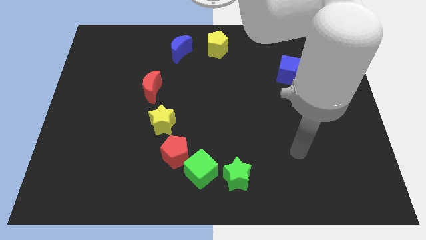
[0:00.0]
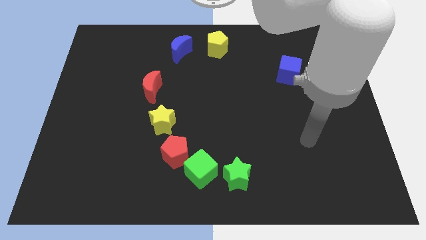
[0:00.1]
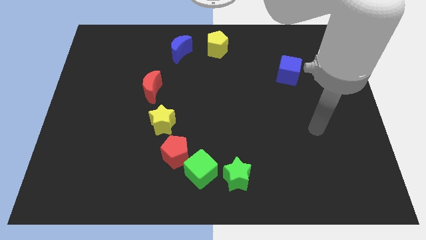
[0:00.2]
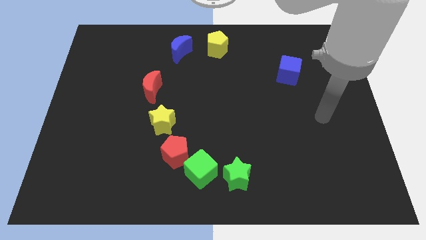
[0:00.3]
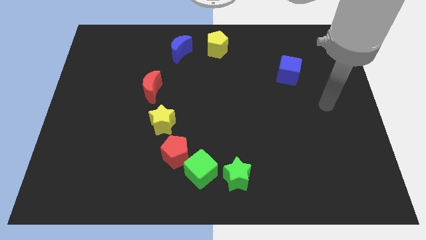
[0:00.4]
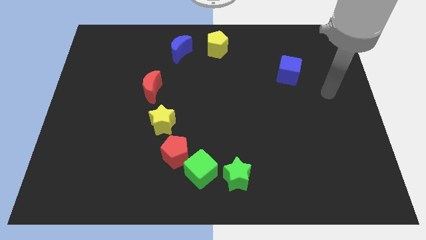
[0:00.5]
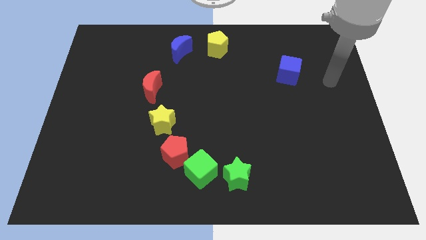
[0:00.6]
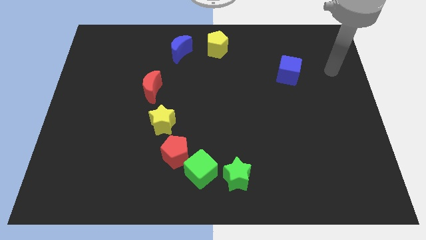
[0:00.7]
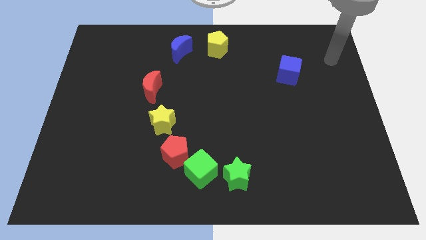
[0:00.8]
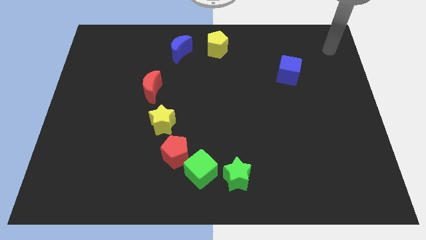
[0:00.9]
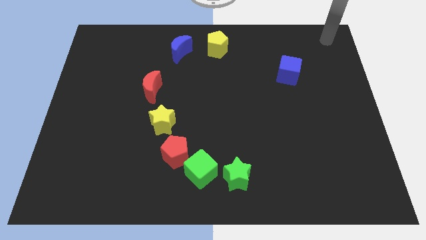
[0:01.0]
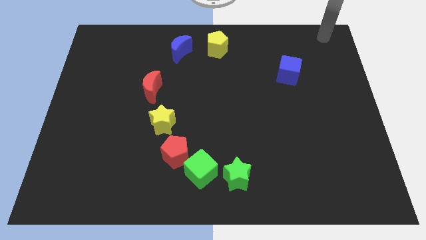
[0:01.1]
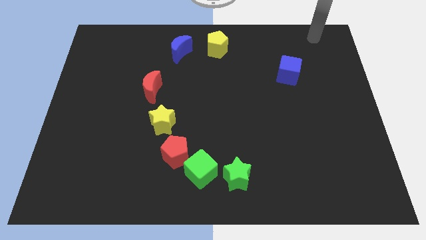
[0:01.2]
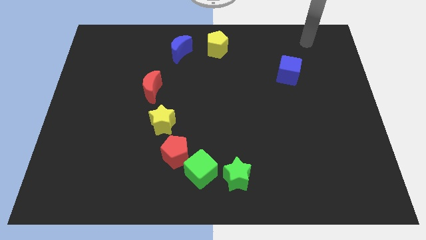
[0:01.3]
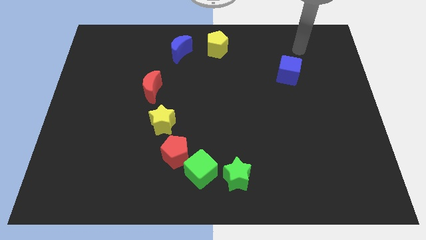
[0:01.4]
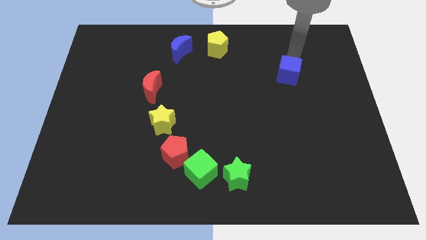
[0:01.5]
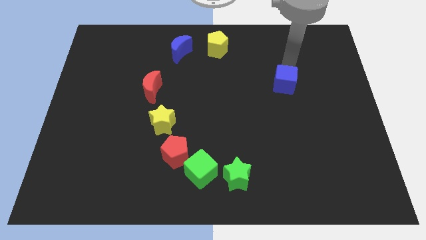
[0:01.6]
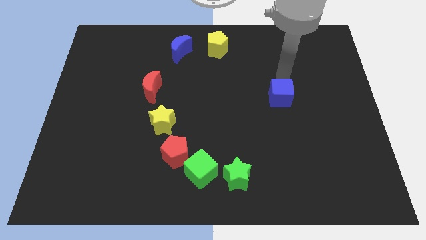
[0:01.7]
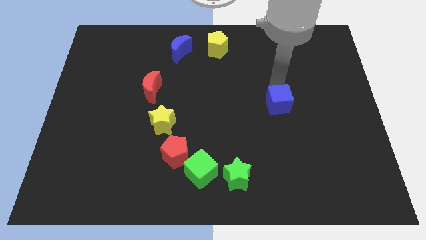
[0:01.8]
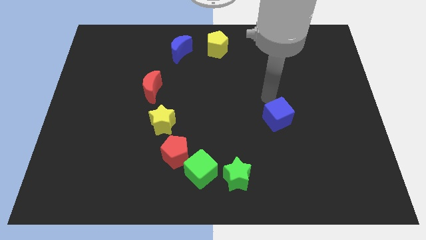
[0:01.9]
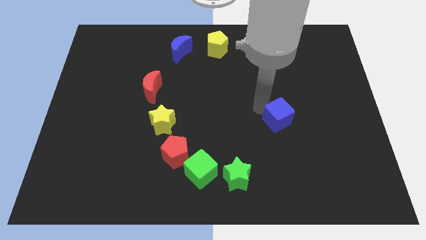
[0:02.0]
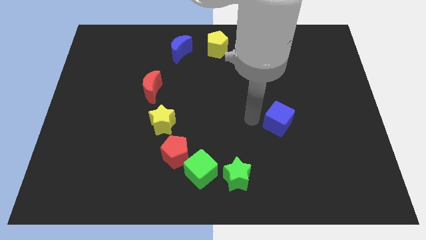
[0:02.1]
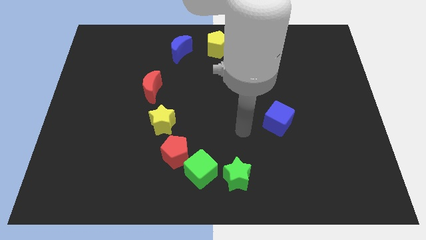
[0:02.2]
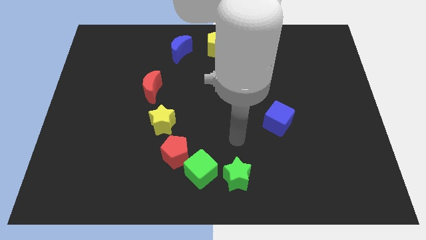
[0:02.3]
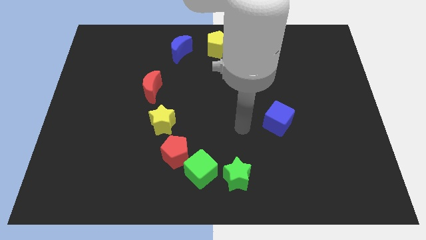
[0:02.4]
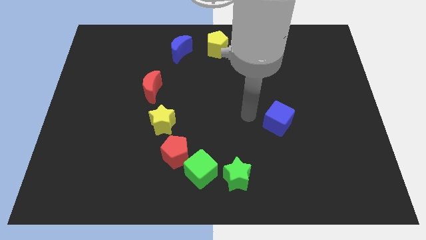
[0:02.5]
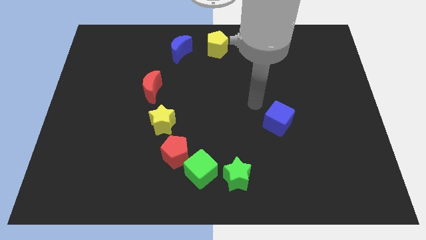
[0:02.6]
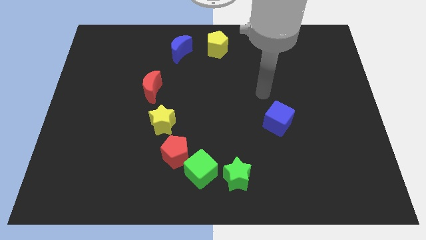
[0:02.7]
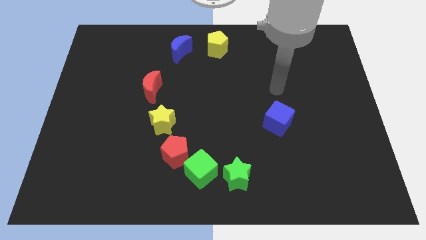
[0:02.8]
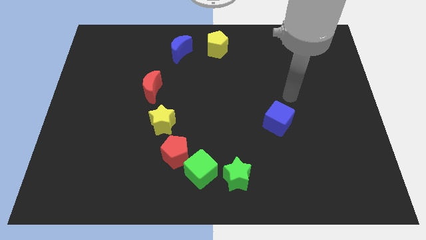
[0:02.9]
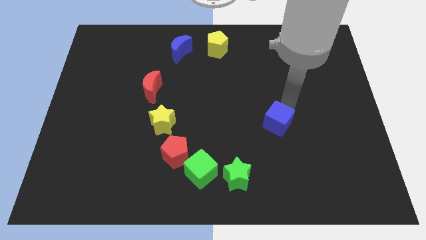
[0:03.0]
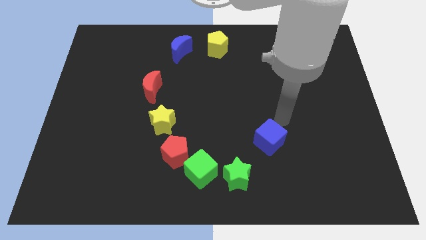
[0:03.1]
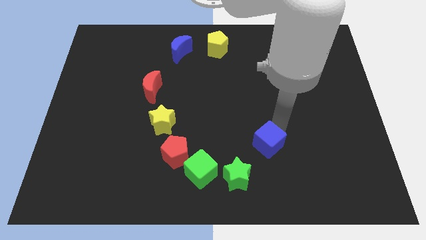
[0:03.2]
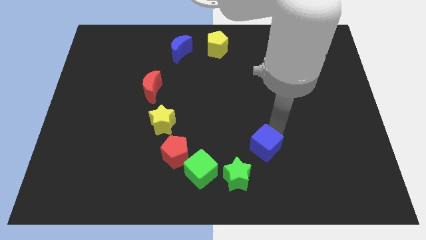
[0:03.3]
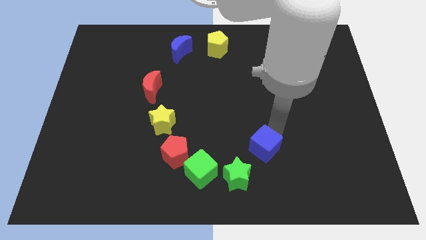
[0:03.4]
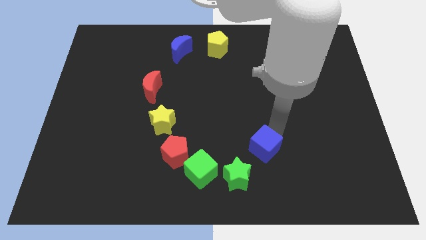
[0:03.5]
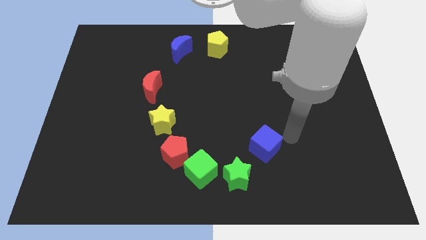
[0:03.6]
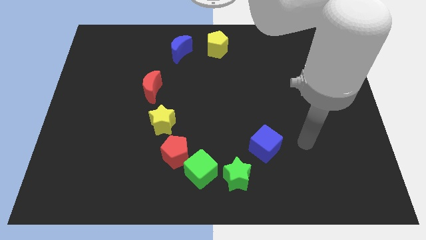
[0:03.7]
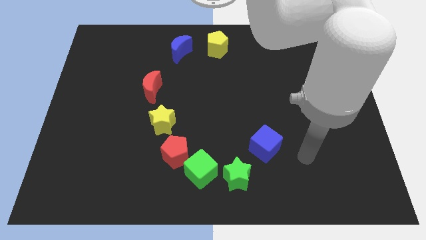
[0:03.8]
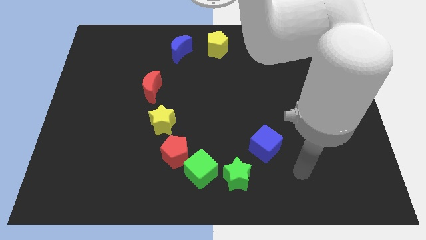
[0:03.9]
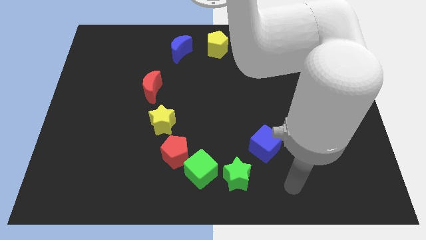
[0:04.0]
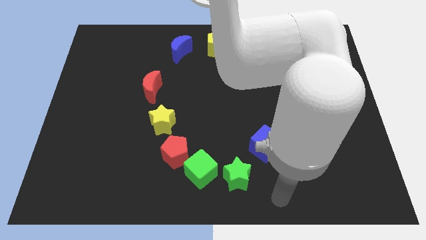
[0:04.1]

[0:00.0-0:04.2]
move the blue cube to the right of the green star

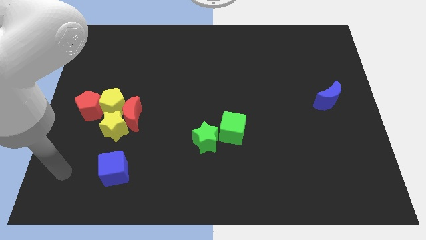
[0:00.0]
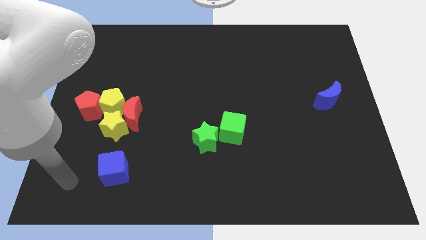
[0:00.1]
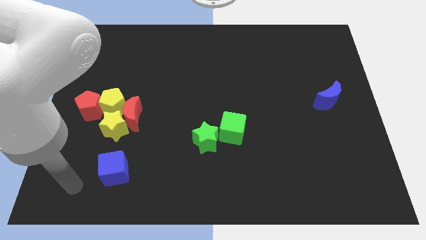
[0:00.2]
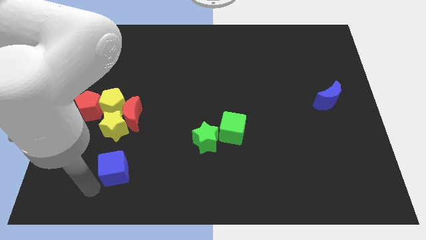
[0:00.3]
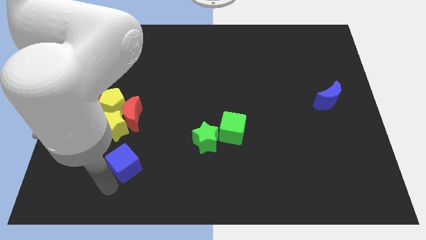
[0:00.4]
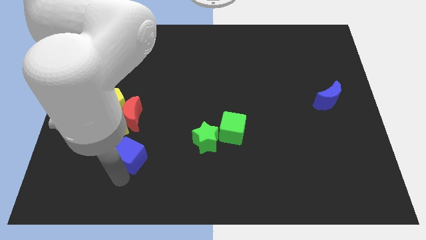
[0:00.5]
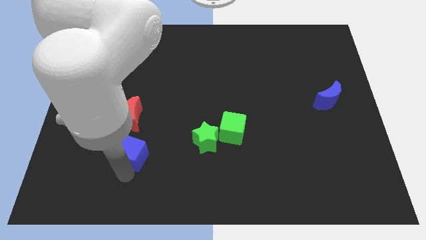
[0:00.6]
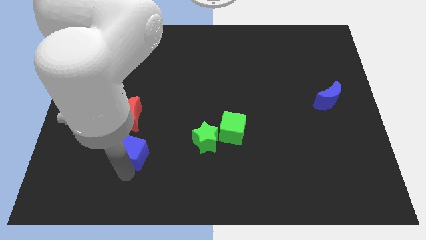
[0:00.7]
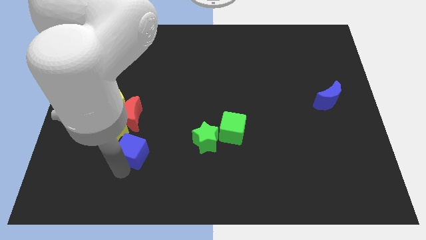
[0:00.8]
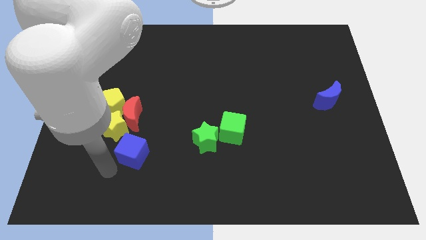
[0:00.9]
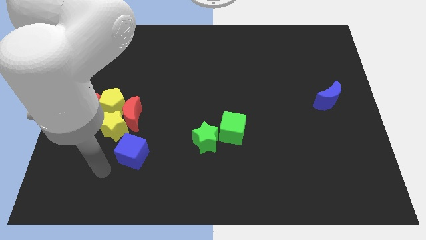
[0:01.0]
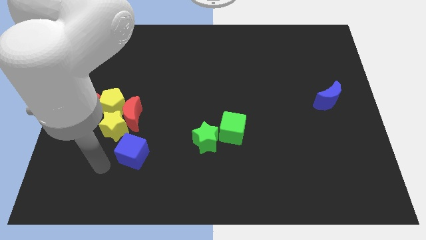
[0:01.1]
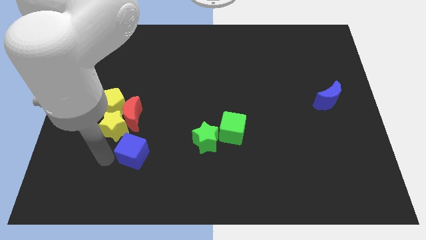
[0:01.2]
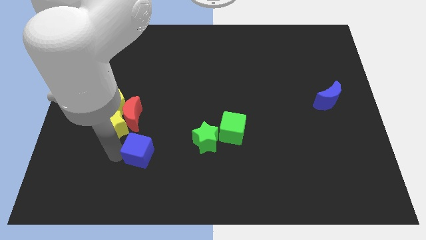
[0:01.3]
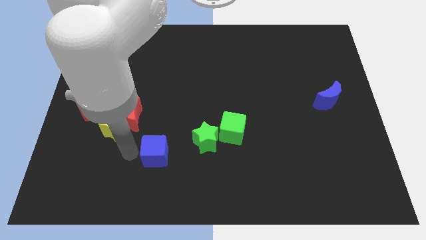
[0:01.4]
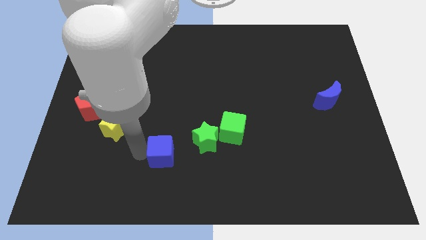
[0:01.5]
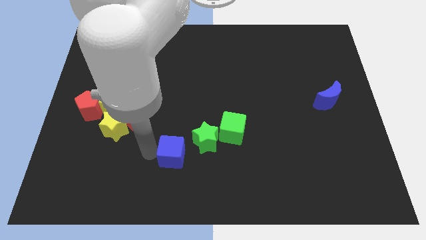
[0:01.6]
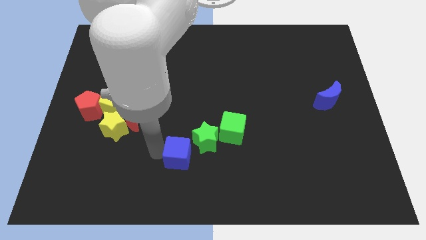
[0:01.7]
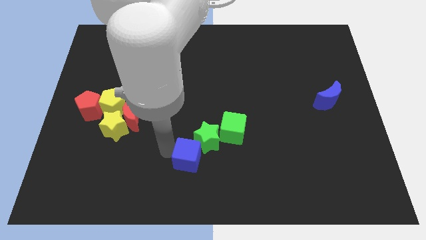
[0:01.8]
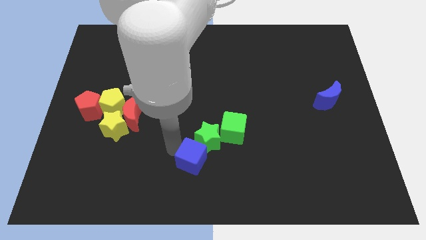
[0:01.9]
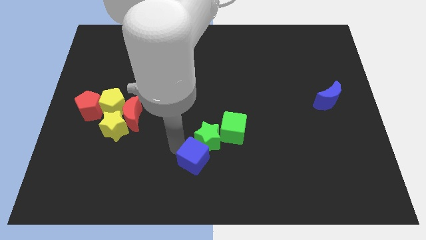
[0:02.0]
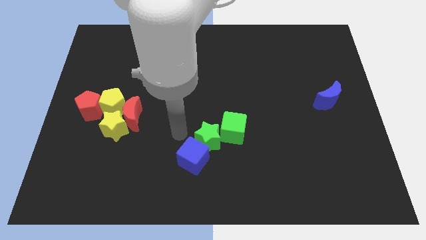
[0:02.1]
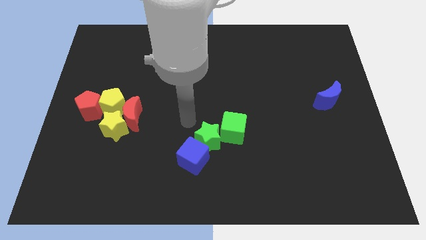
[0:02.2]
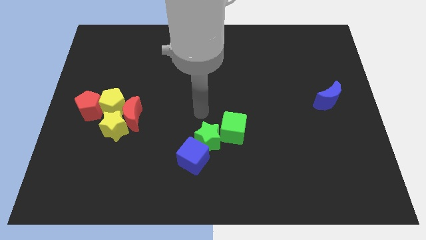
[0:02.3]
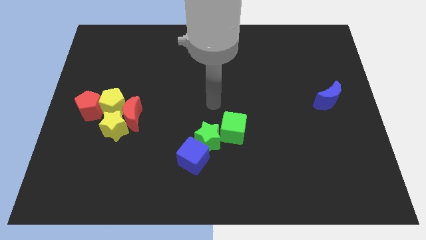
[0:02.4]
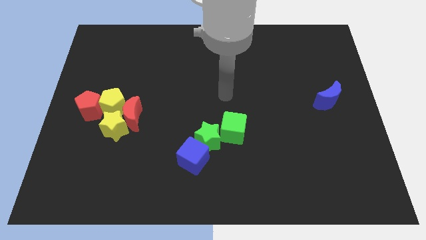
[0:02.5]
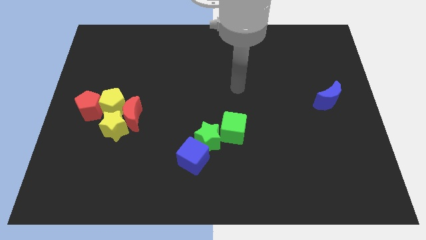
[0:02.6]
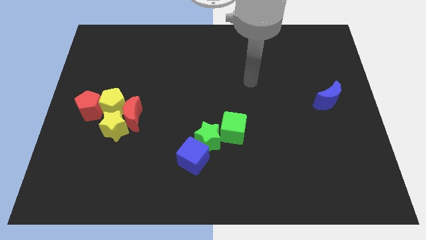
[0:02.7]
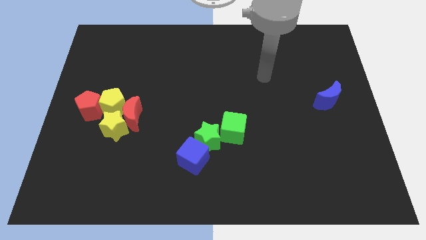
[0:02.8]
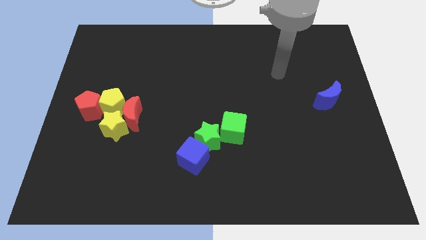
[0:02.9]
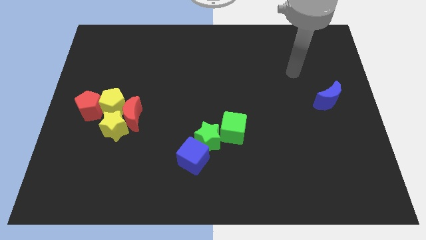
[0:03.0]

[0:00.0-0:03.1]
place blue cube to the bottom left of green star

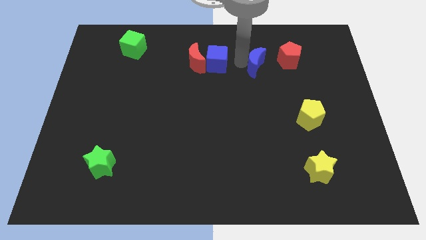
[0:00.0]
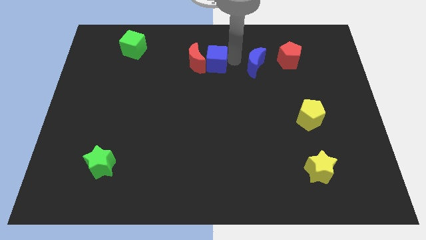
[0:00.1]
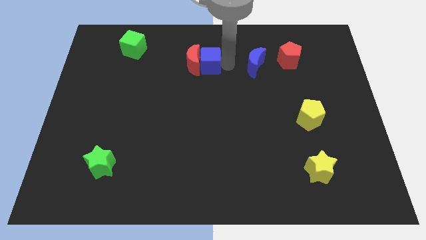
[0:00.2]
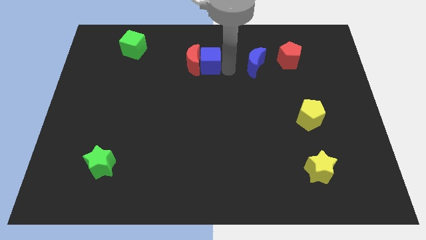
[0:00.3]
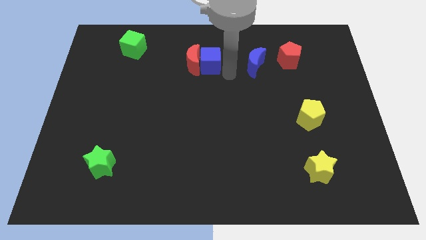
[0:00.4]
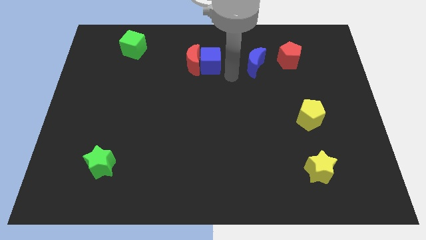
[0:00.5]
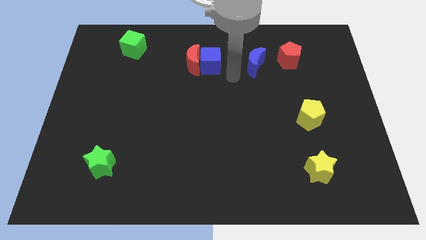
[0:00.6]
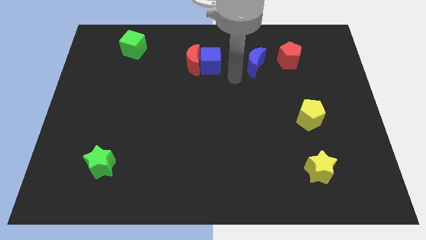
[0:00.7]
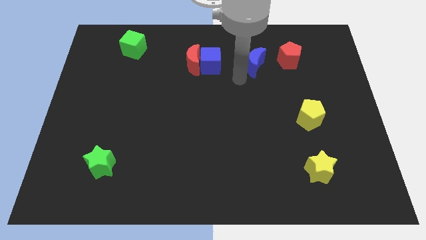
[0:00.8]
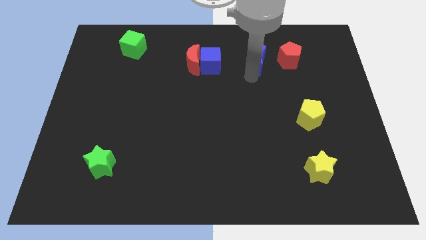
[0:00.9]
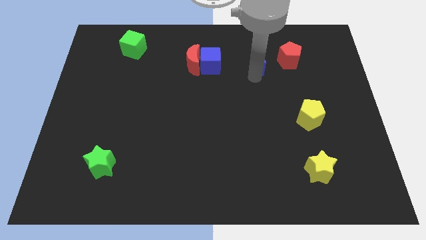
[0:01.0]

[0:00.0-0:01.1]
slightly push the blue cube into the red crescent

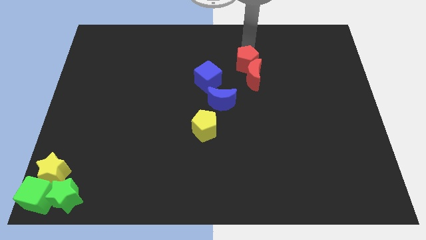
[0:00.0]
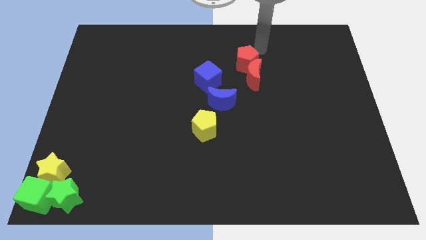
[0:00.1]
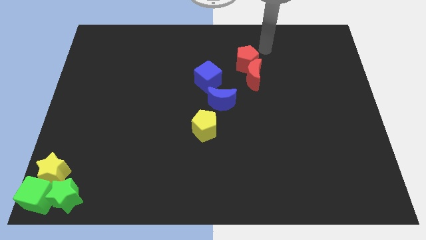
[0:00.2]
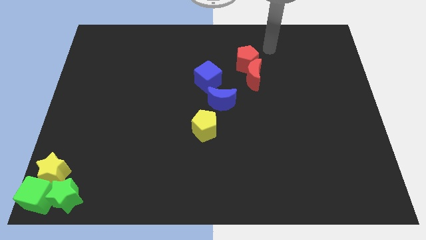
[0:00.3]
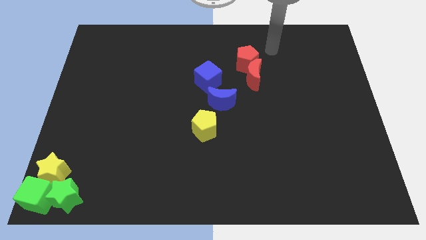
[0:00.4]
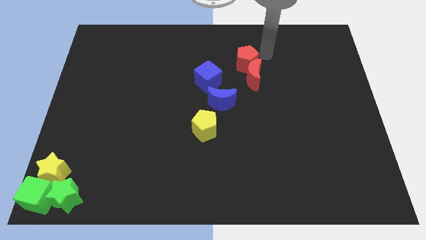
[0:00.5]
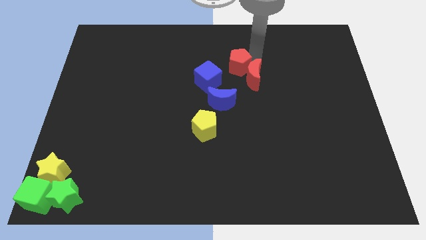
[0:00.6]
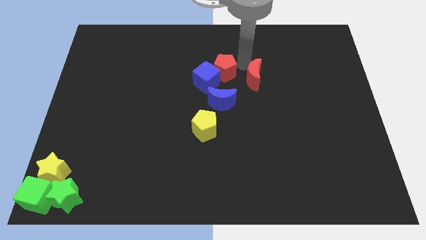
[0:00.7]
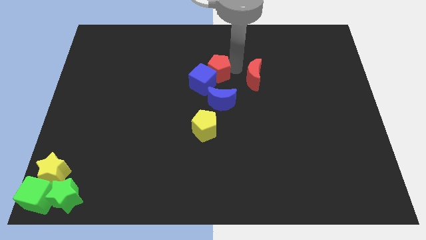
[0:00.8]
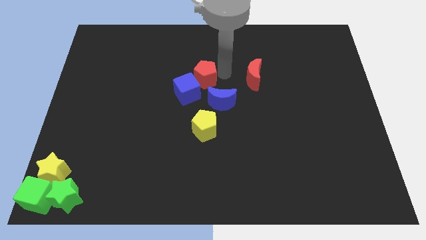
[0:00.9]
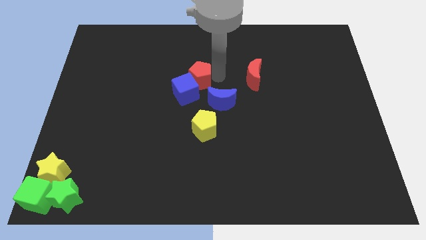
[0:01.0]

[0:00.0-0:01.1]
slide red pentagon into blue cube
